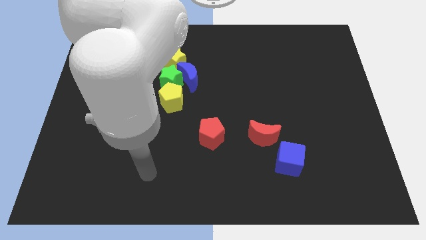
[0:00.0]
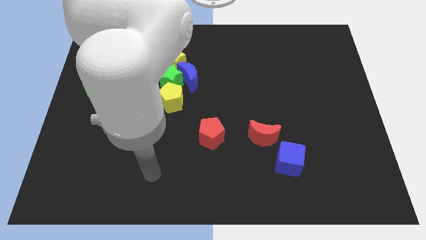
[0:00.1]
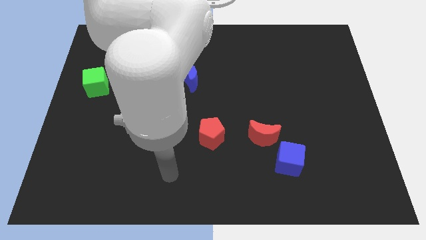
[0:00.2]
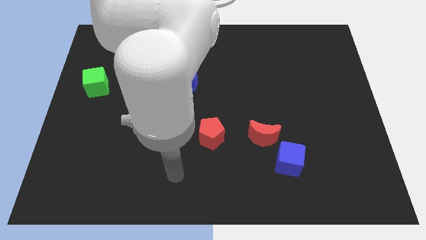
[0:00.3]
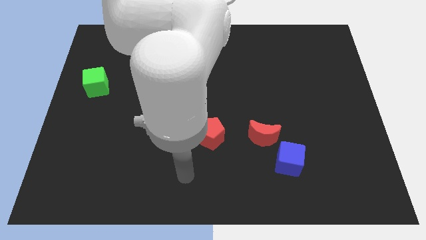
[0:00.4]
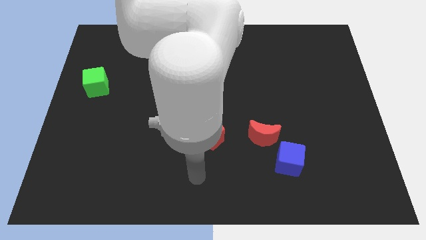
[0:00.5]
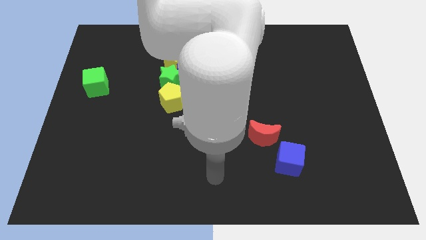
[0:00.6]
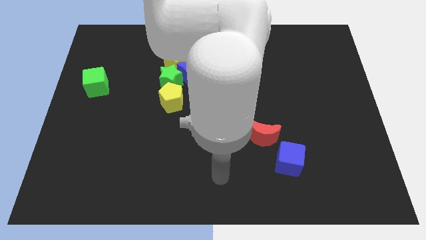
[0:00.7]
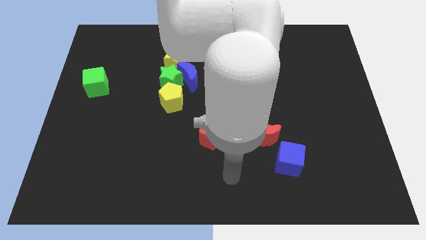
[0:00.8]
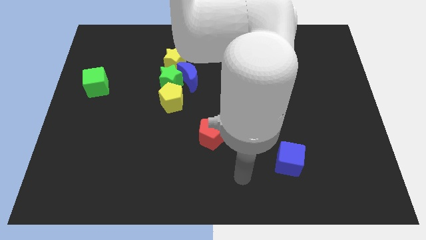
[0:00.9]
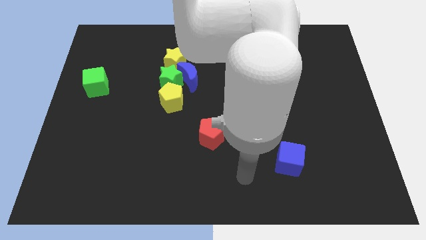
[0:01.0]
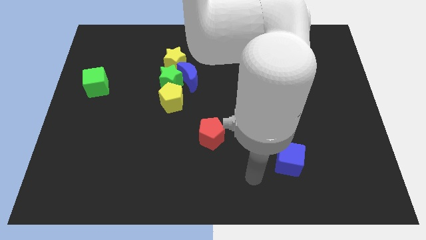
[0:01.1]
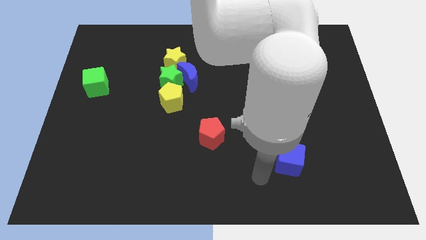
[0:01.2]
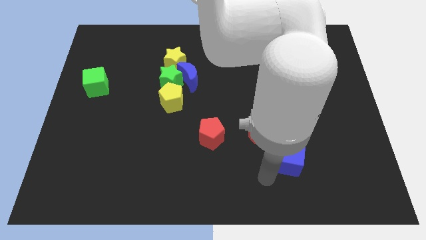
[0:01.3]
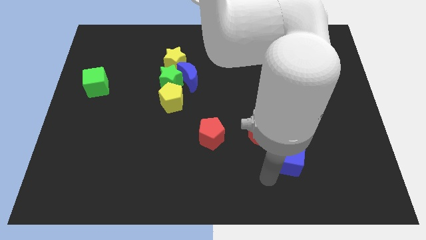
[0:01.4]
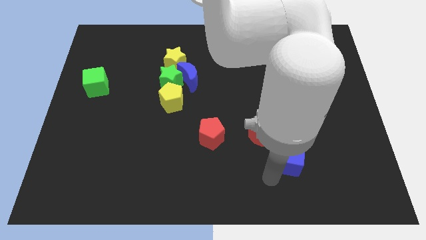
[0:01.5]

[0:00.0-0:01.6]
move the arm to the bottom of the blue cube

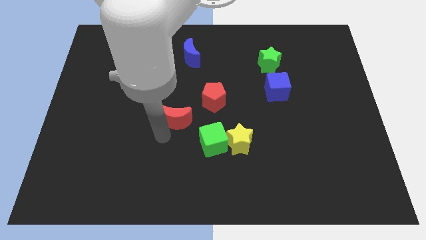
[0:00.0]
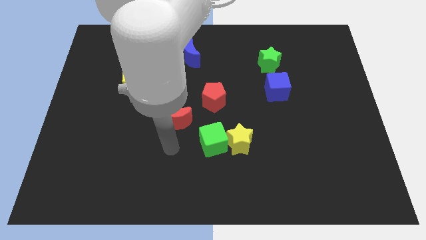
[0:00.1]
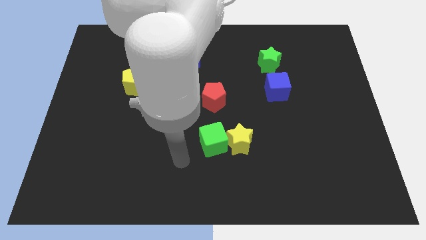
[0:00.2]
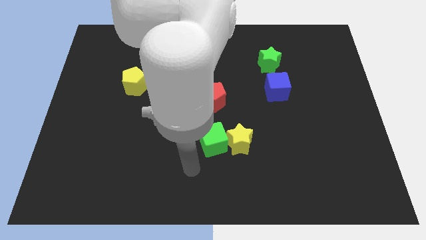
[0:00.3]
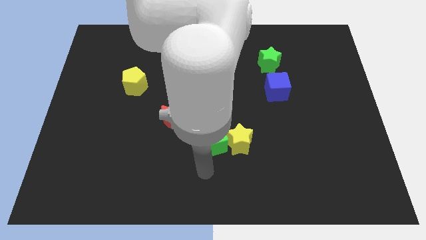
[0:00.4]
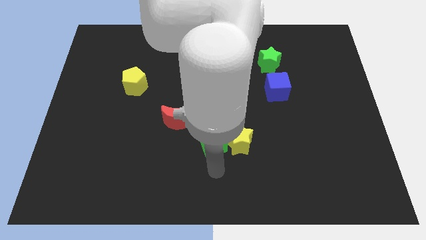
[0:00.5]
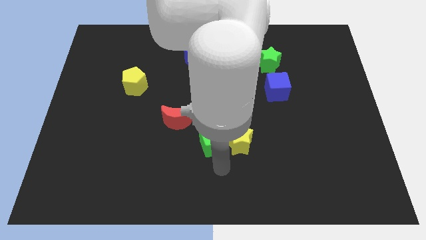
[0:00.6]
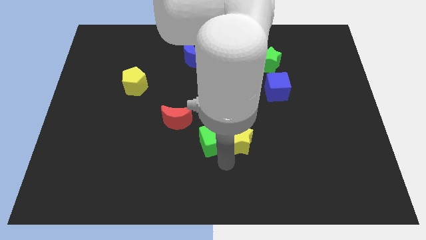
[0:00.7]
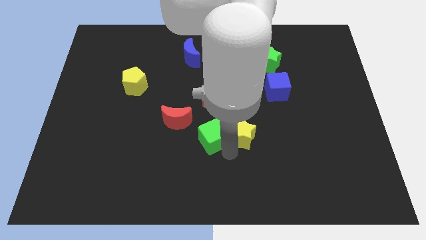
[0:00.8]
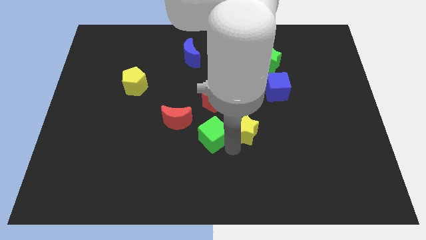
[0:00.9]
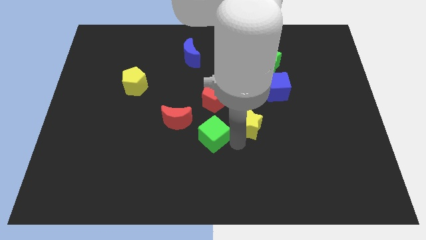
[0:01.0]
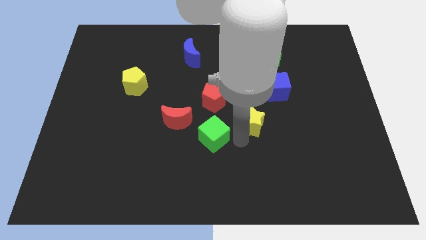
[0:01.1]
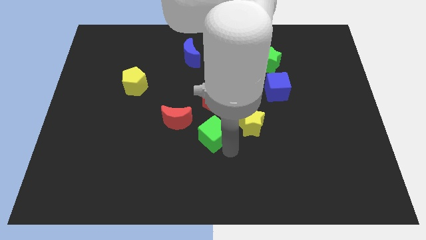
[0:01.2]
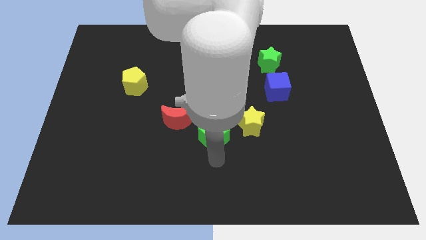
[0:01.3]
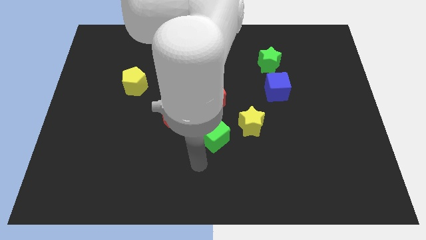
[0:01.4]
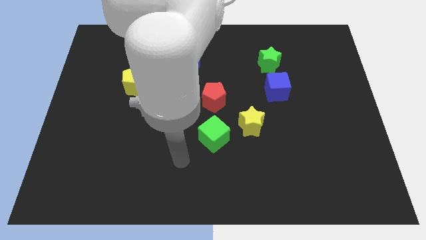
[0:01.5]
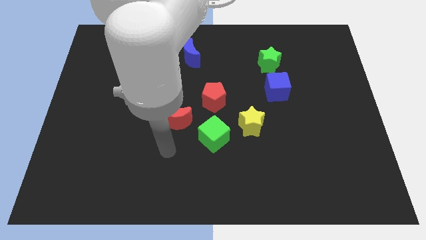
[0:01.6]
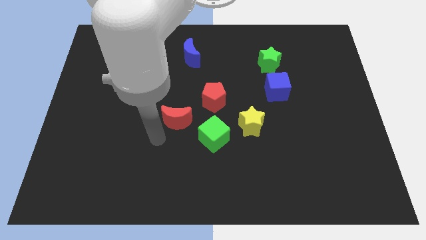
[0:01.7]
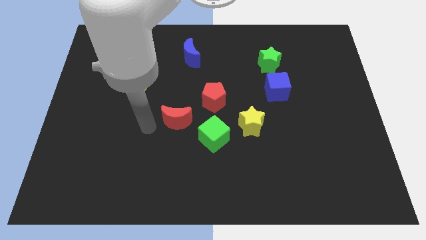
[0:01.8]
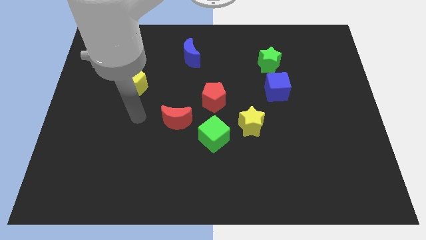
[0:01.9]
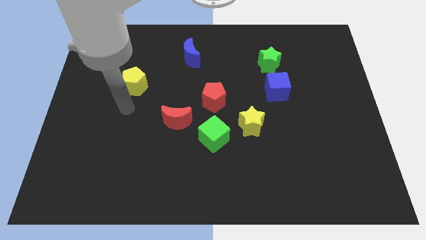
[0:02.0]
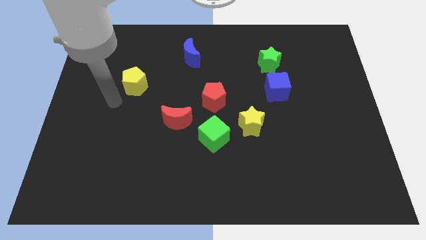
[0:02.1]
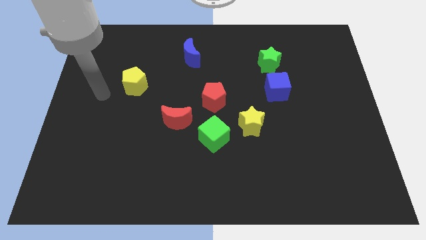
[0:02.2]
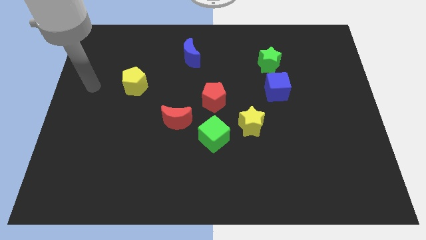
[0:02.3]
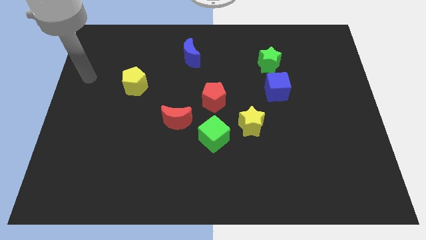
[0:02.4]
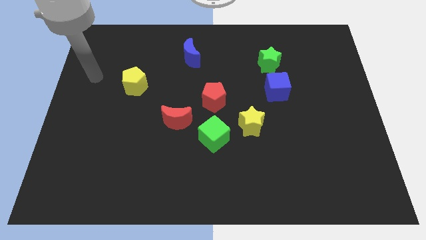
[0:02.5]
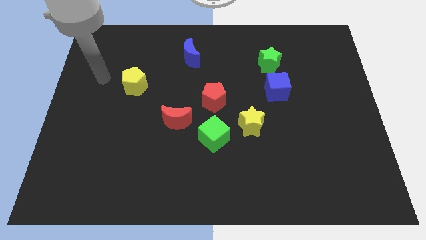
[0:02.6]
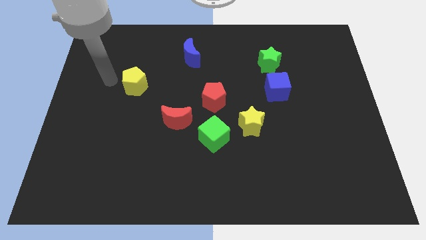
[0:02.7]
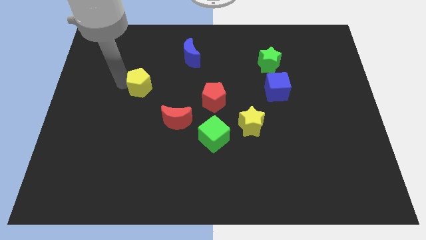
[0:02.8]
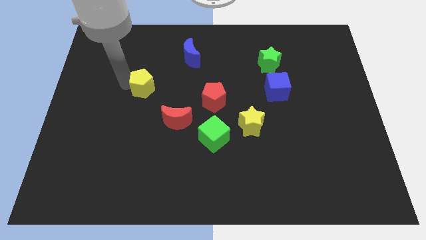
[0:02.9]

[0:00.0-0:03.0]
move the arm towards the left side of the yellow pentagon

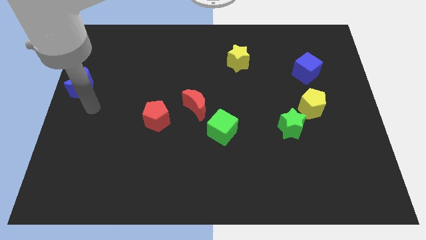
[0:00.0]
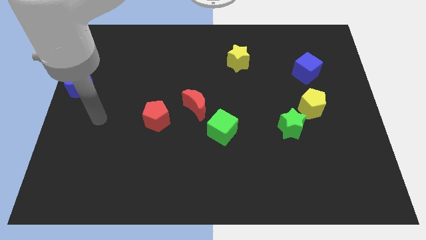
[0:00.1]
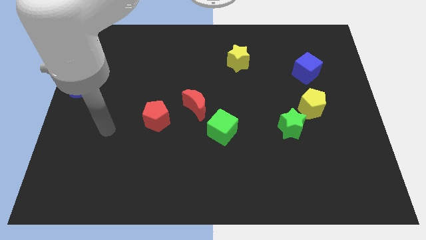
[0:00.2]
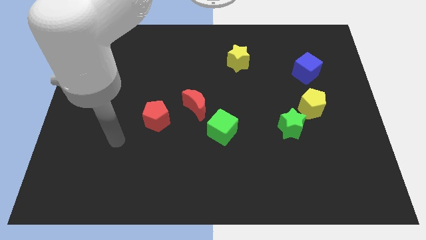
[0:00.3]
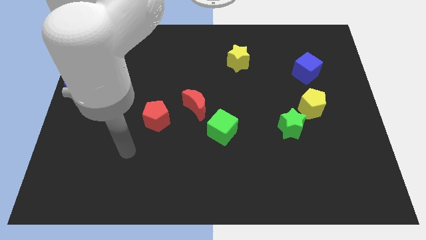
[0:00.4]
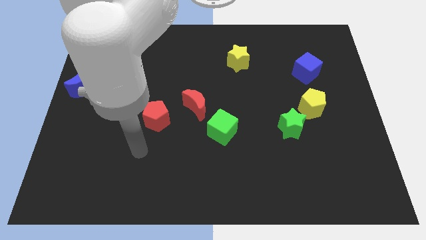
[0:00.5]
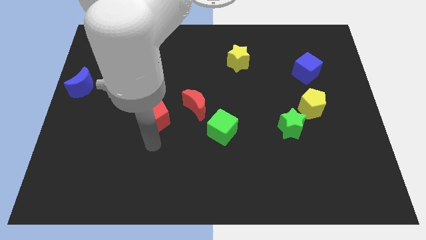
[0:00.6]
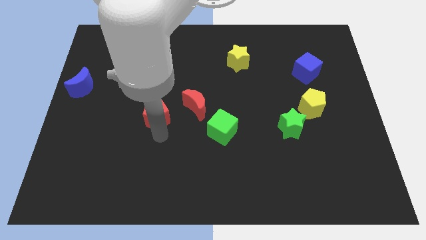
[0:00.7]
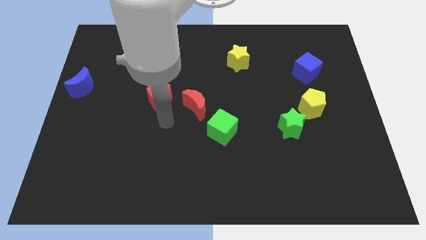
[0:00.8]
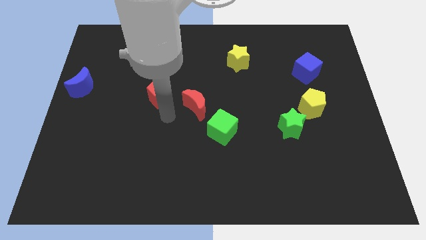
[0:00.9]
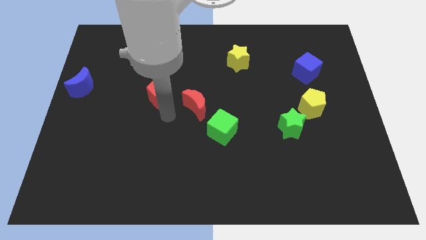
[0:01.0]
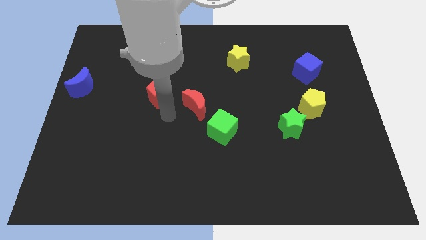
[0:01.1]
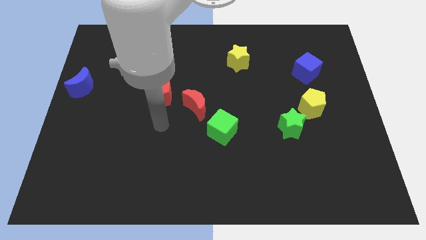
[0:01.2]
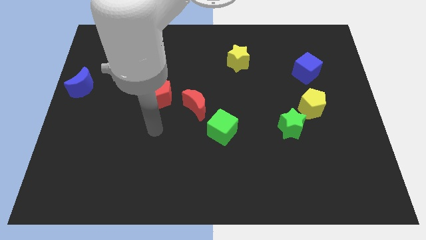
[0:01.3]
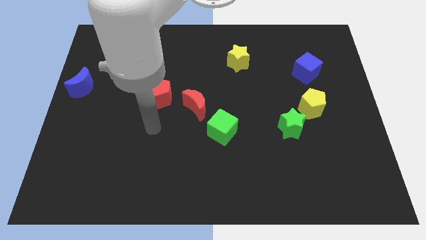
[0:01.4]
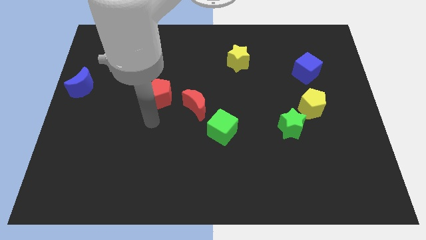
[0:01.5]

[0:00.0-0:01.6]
push the red pentagon towards the top side of the board

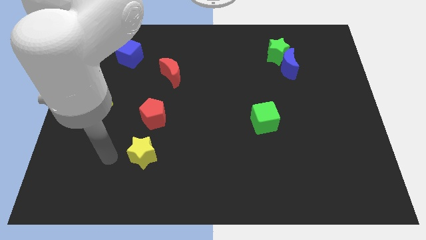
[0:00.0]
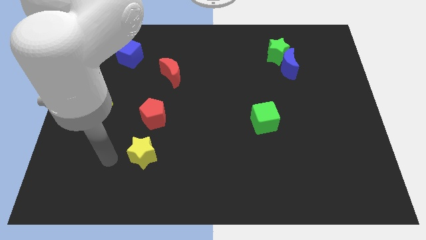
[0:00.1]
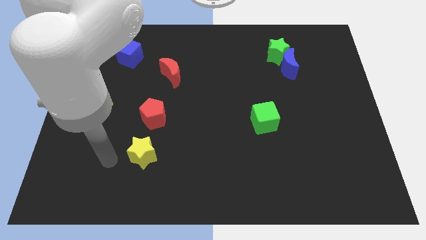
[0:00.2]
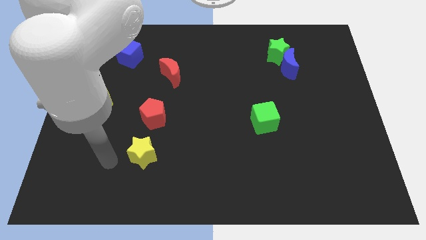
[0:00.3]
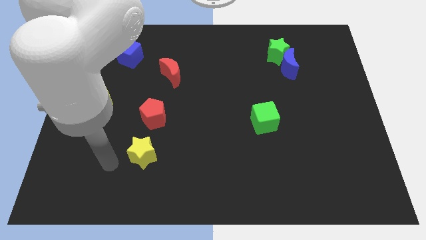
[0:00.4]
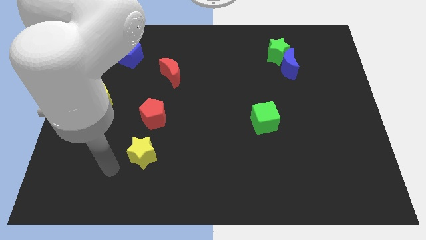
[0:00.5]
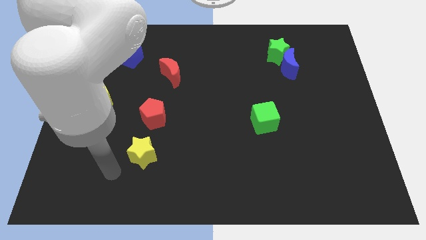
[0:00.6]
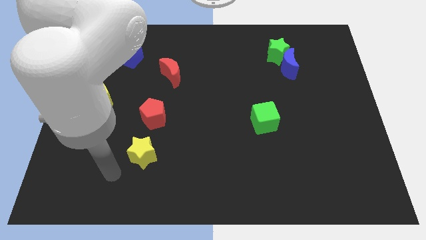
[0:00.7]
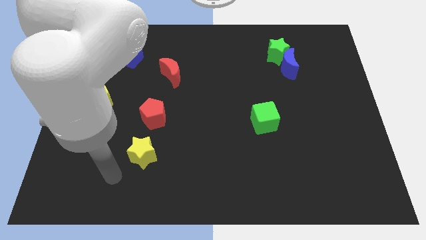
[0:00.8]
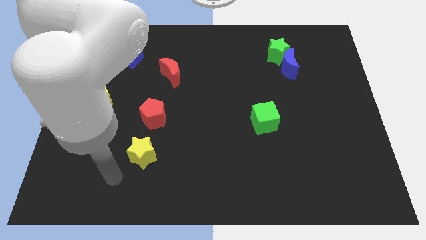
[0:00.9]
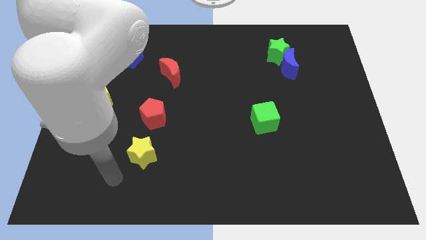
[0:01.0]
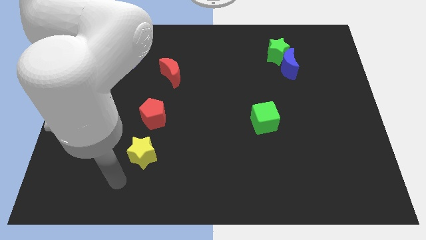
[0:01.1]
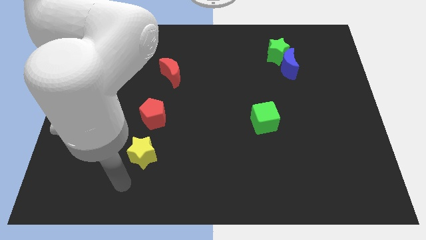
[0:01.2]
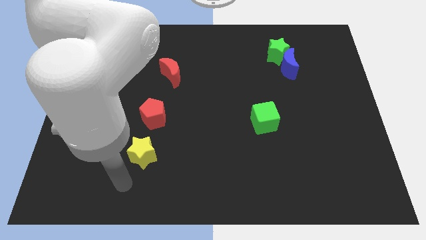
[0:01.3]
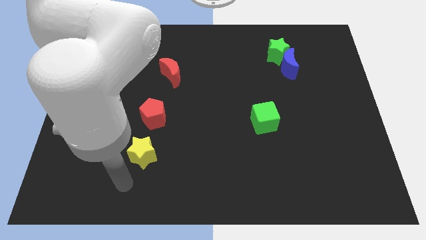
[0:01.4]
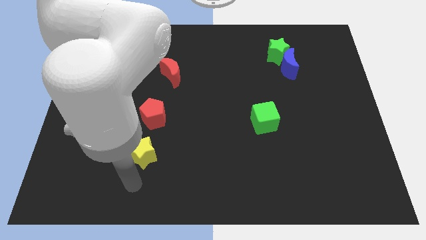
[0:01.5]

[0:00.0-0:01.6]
move your arm to the bottom of yellow star

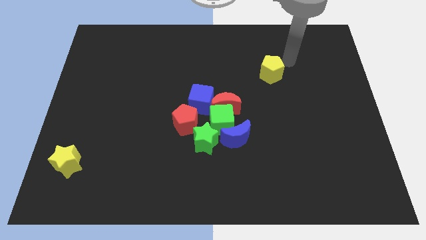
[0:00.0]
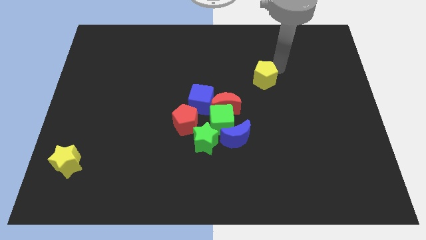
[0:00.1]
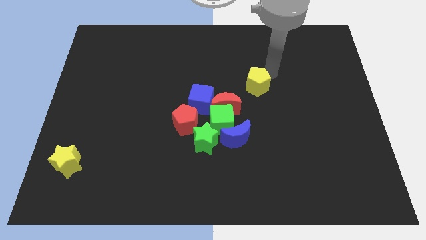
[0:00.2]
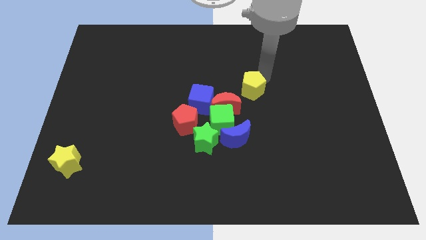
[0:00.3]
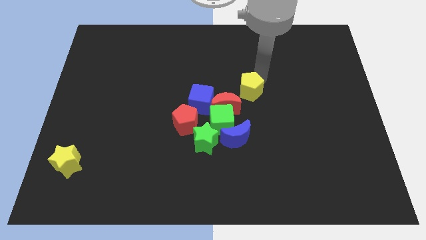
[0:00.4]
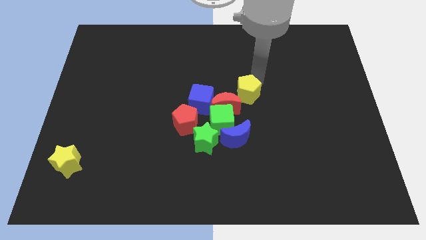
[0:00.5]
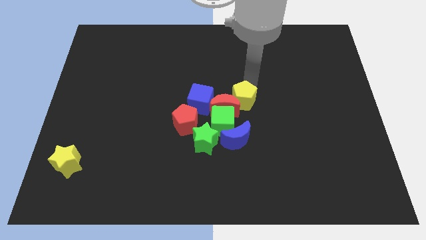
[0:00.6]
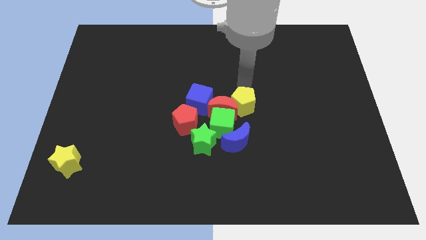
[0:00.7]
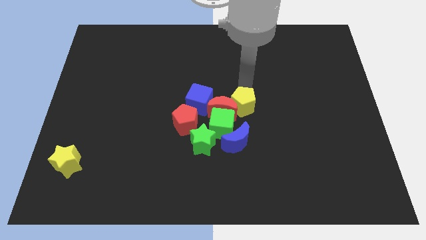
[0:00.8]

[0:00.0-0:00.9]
place yellow pentagon near red crescent
